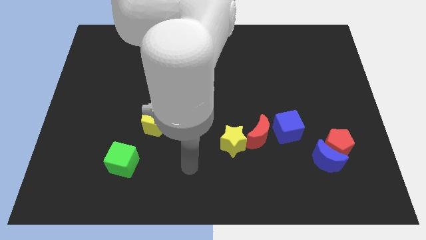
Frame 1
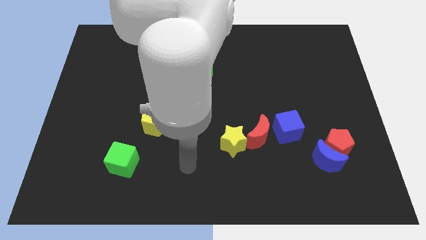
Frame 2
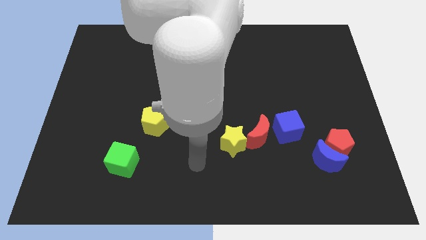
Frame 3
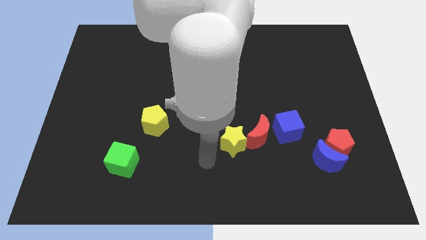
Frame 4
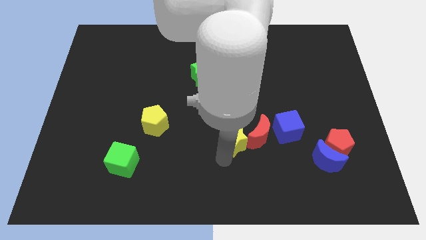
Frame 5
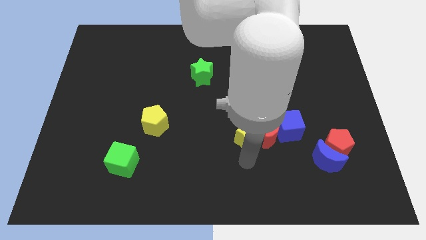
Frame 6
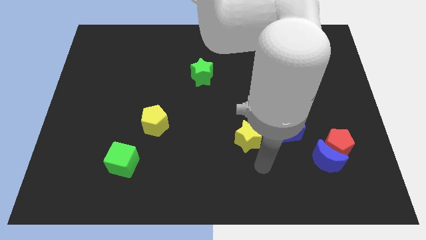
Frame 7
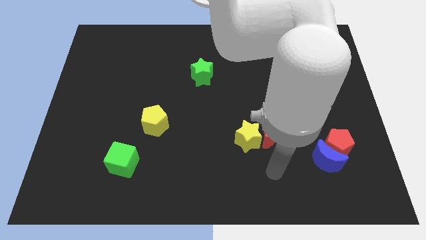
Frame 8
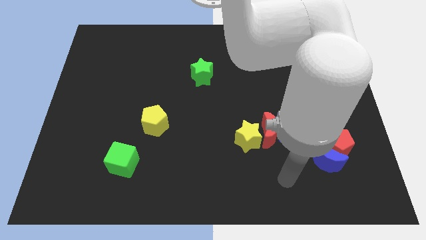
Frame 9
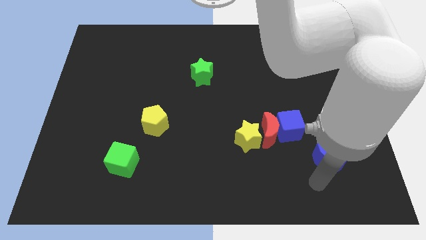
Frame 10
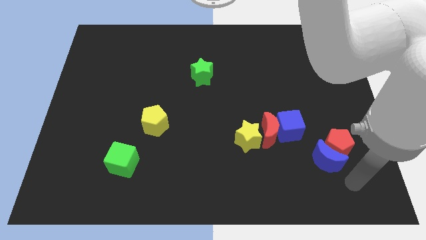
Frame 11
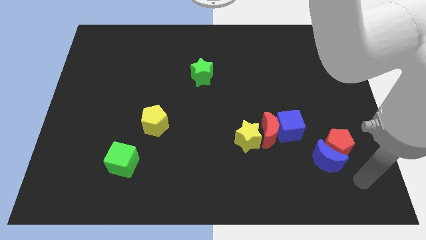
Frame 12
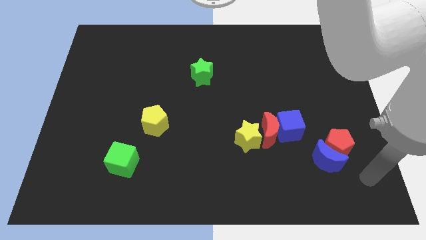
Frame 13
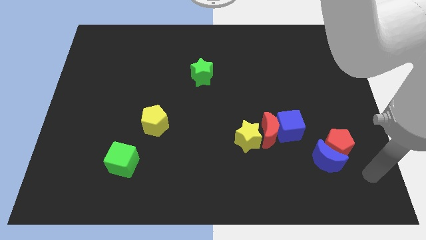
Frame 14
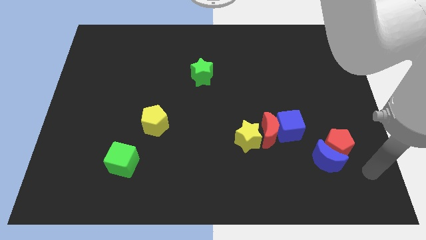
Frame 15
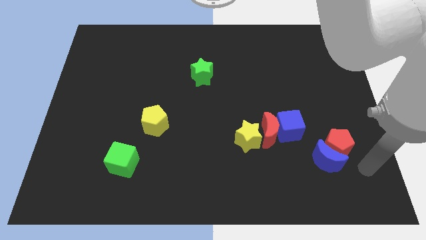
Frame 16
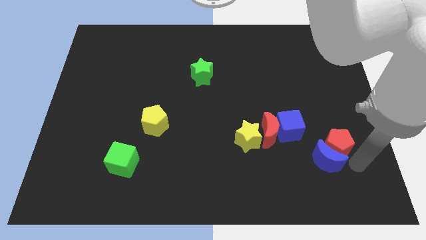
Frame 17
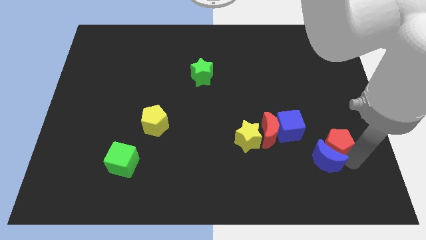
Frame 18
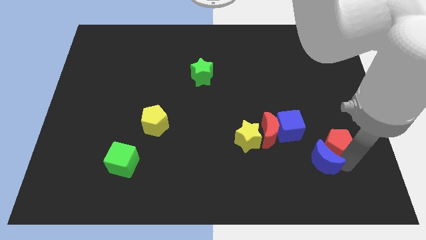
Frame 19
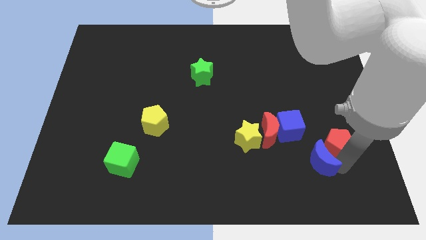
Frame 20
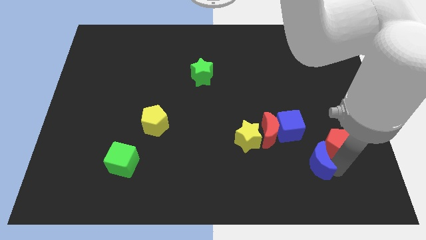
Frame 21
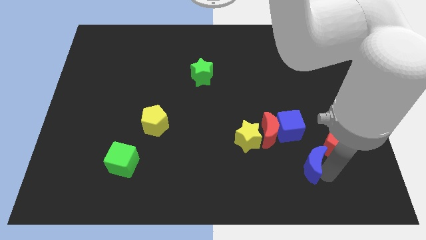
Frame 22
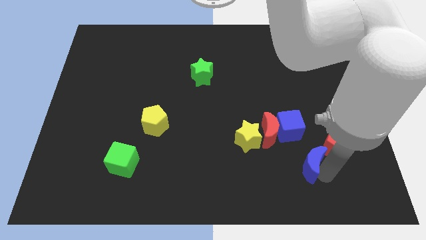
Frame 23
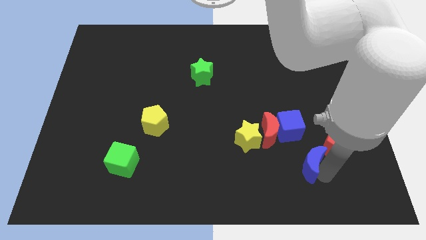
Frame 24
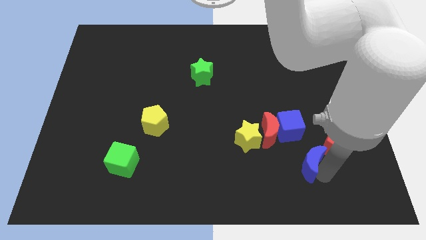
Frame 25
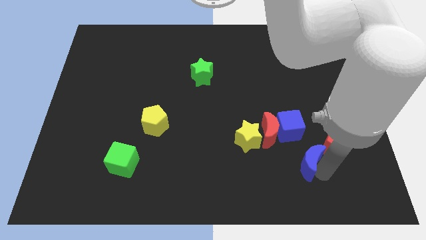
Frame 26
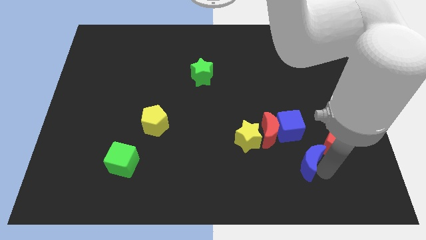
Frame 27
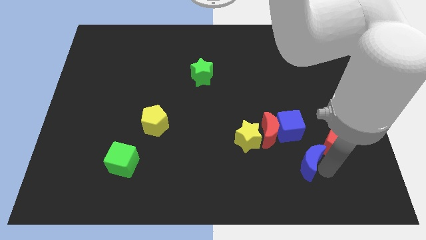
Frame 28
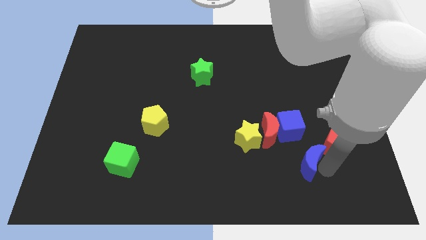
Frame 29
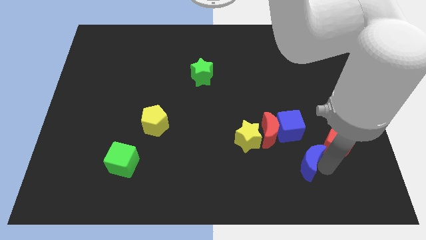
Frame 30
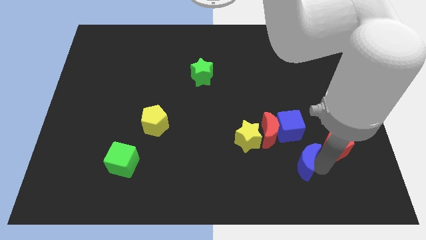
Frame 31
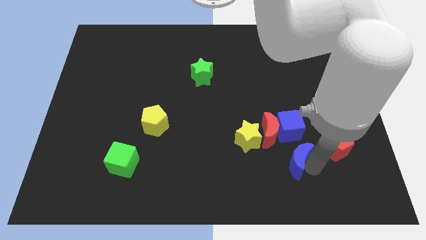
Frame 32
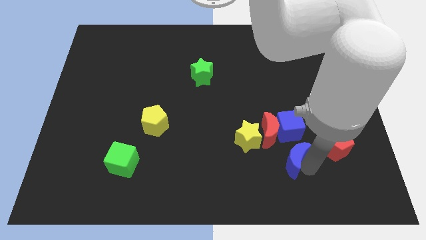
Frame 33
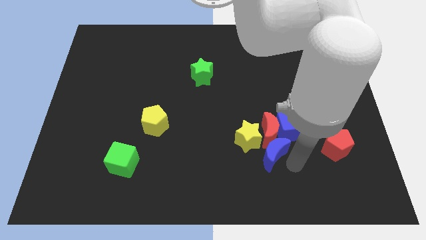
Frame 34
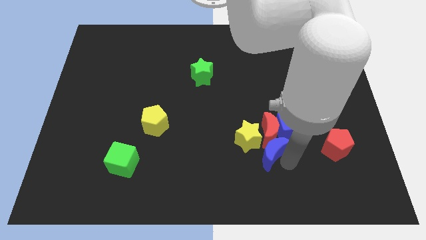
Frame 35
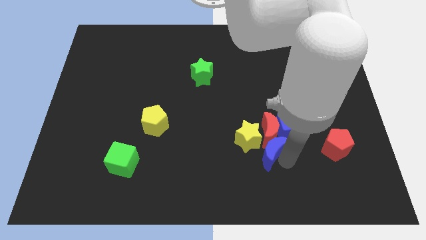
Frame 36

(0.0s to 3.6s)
slide the blue moon towards the yellow star

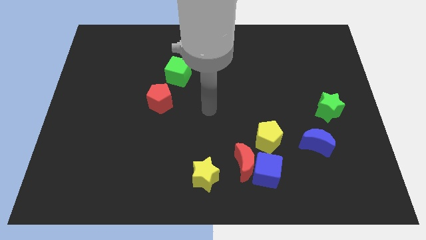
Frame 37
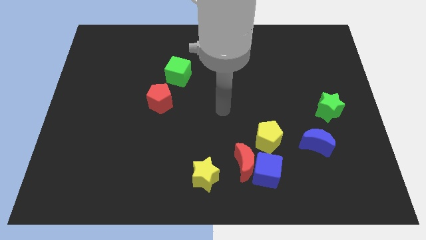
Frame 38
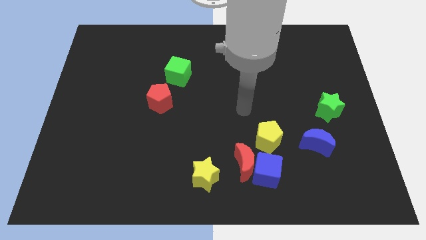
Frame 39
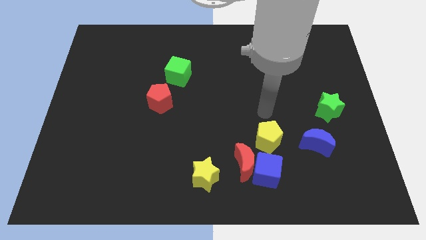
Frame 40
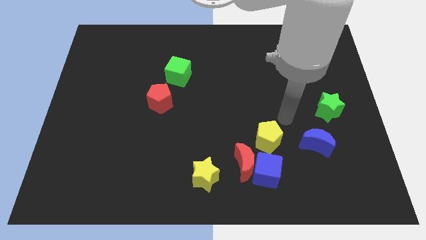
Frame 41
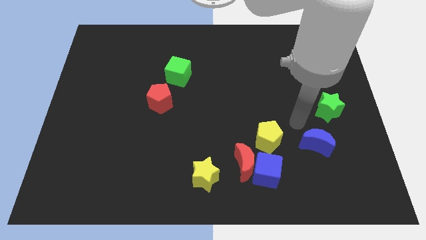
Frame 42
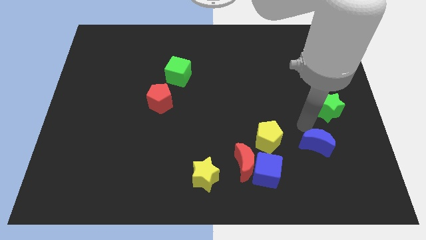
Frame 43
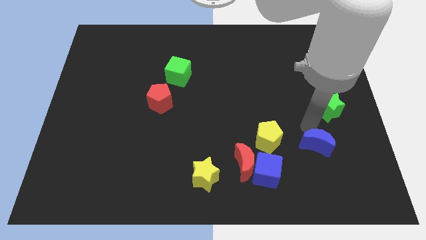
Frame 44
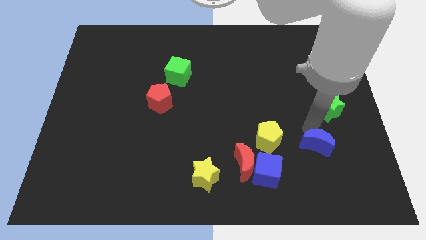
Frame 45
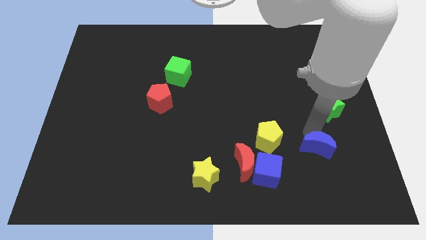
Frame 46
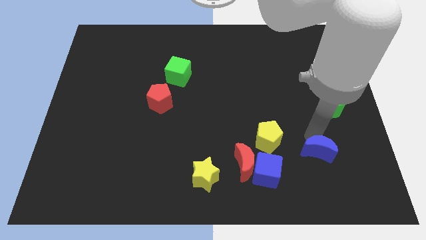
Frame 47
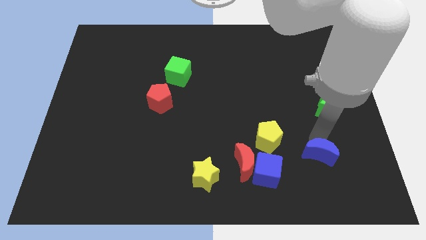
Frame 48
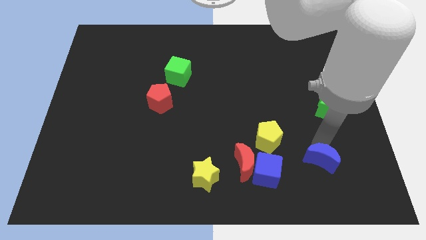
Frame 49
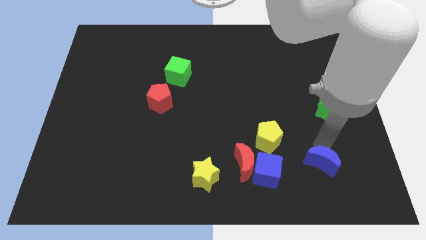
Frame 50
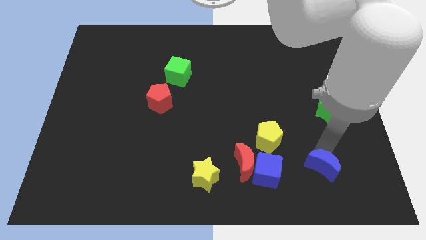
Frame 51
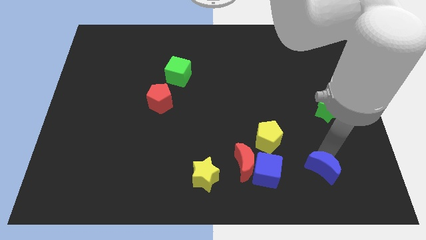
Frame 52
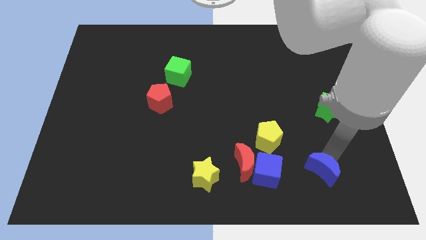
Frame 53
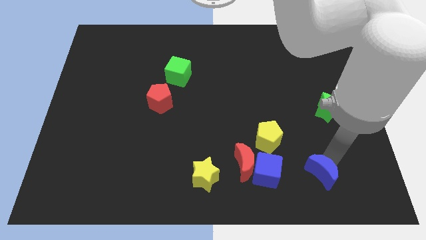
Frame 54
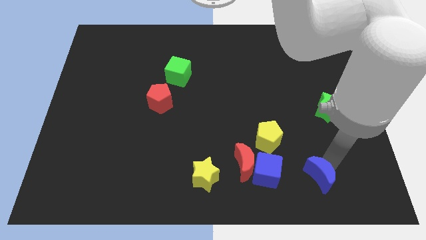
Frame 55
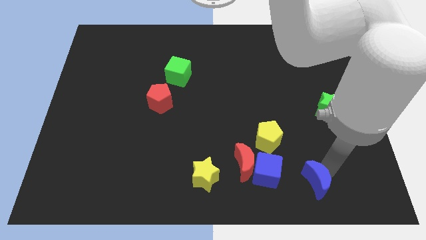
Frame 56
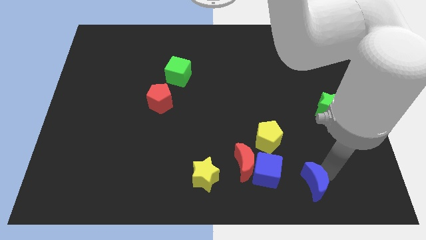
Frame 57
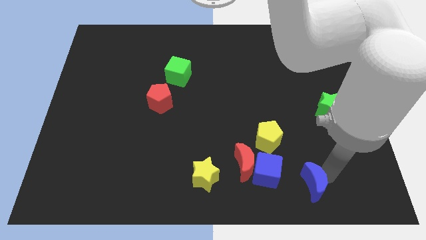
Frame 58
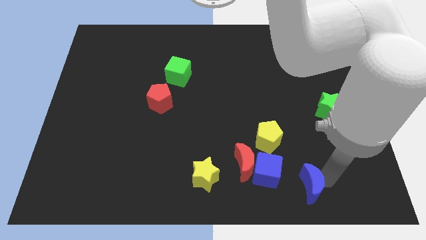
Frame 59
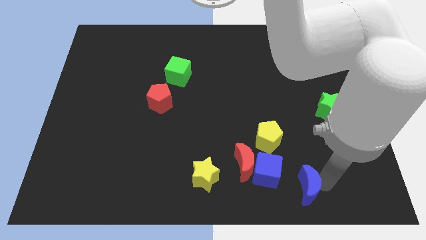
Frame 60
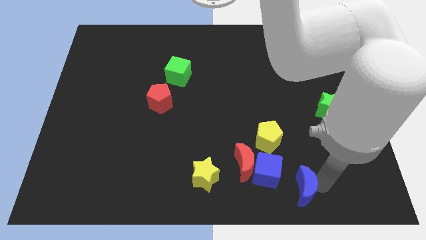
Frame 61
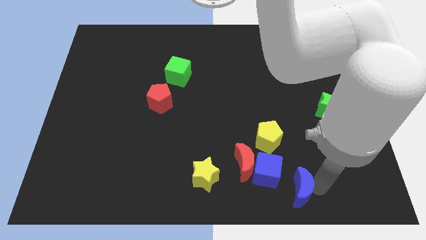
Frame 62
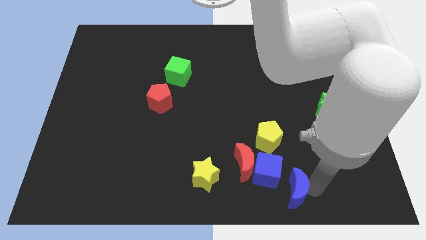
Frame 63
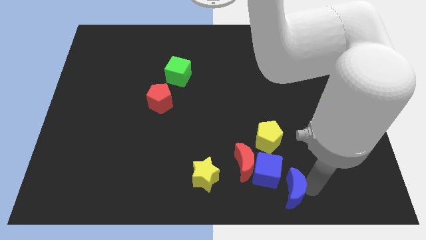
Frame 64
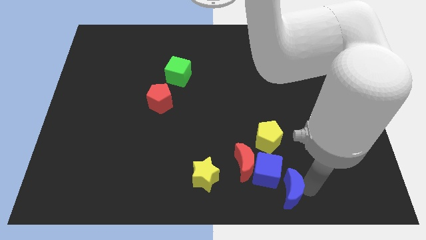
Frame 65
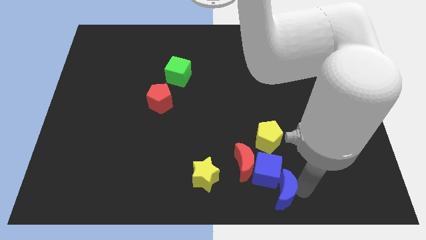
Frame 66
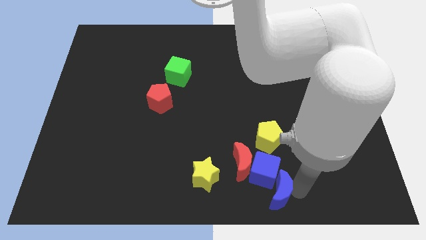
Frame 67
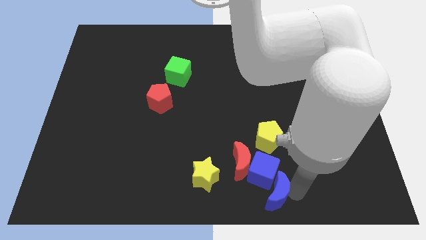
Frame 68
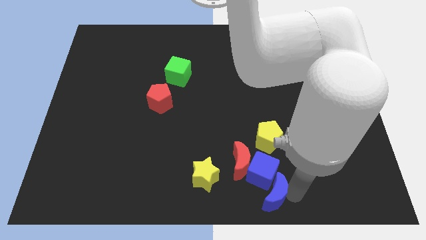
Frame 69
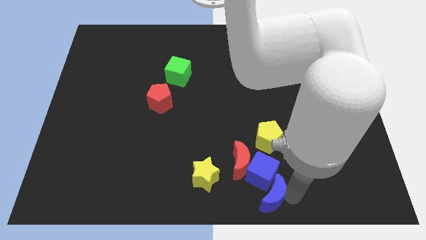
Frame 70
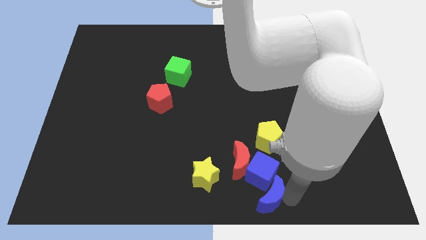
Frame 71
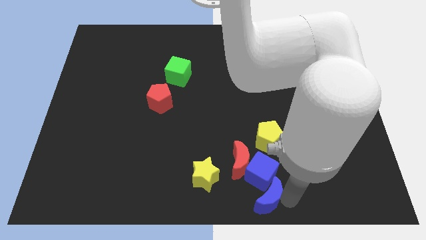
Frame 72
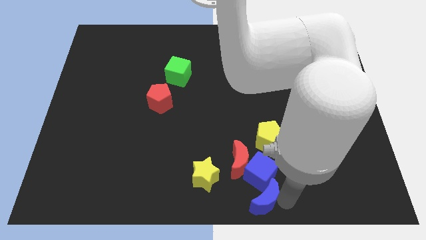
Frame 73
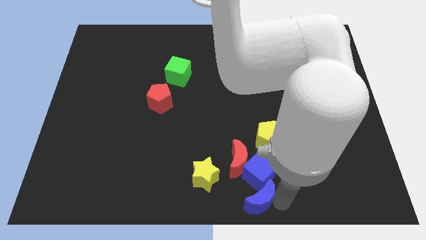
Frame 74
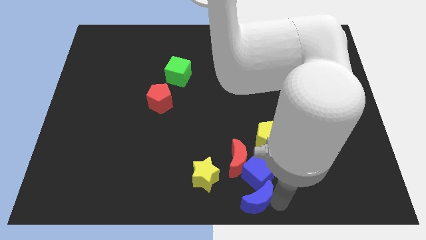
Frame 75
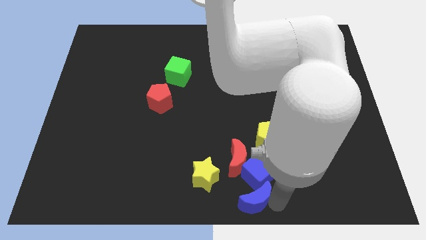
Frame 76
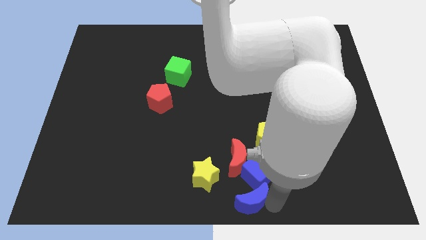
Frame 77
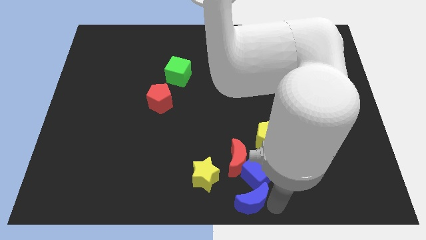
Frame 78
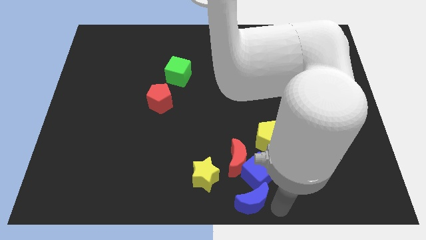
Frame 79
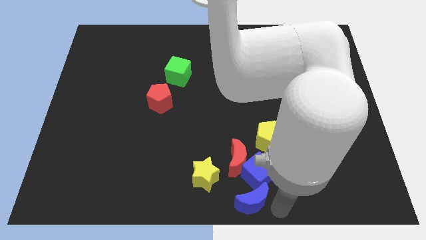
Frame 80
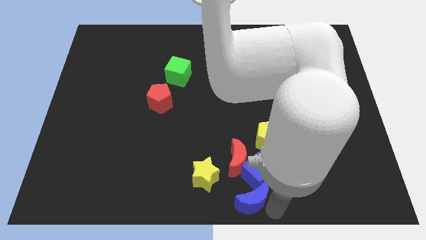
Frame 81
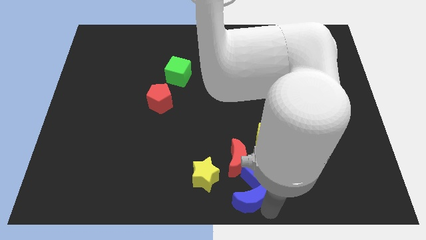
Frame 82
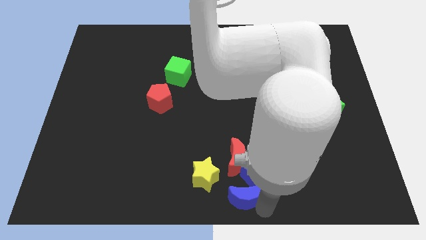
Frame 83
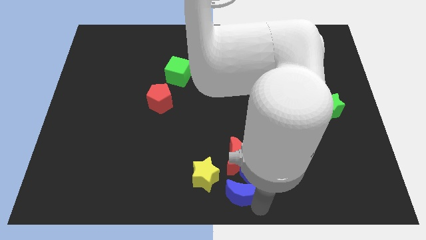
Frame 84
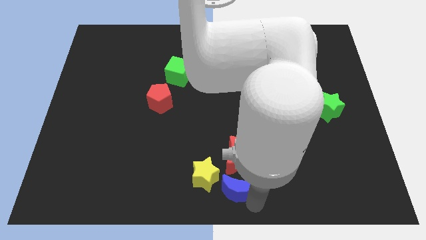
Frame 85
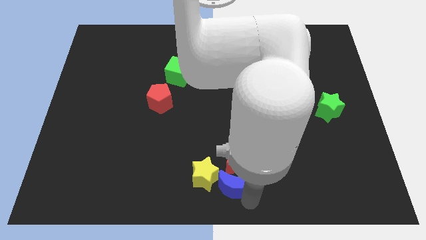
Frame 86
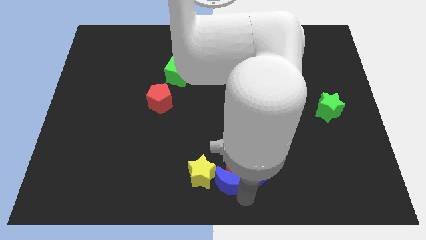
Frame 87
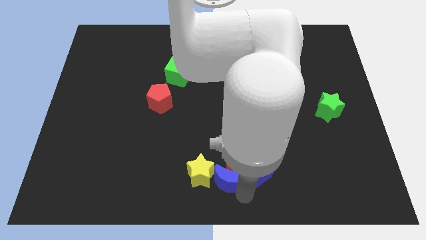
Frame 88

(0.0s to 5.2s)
move the blue moon close to the yellow star

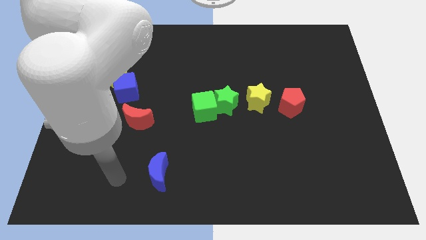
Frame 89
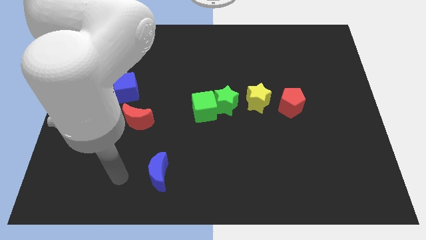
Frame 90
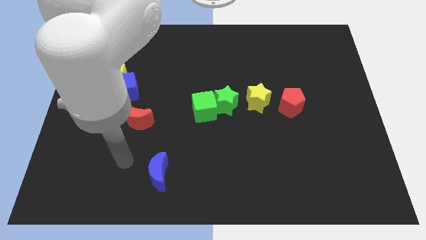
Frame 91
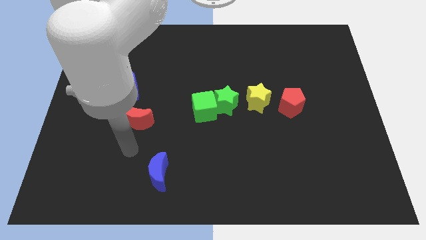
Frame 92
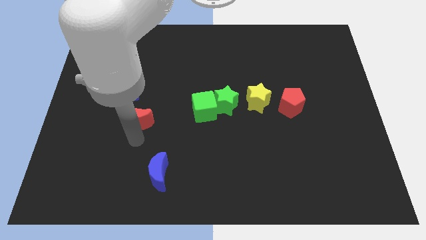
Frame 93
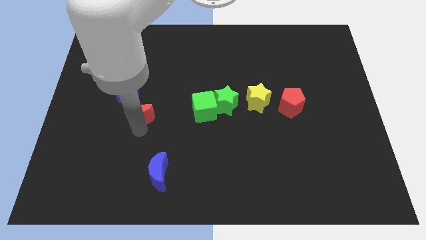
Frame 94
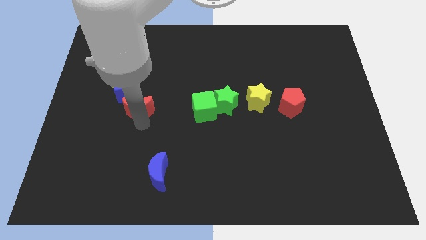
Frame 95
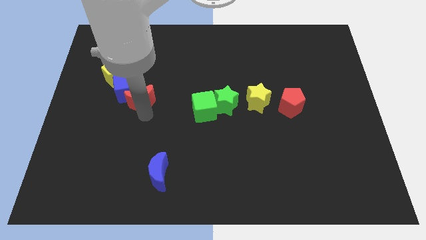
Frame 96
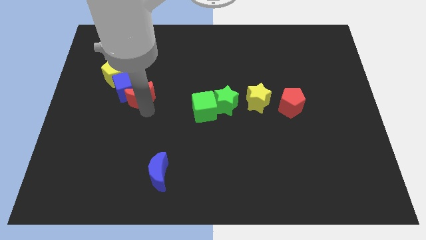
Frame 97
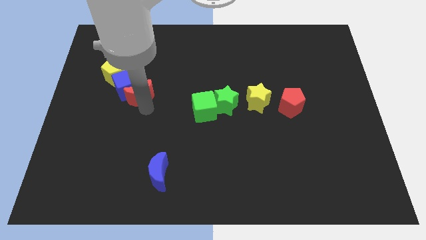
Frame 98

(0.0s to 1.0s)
put the red moon to the blue cube
